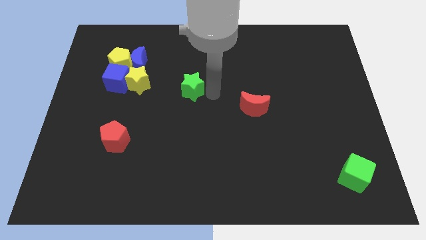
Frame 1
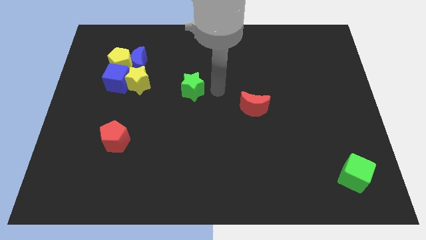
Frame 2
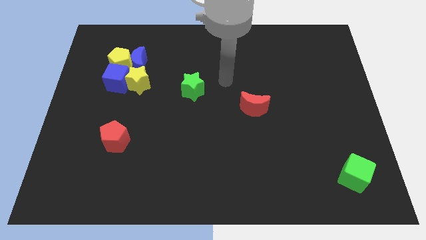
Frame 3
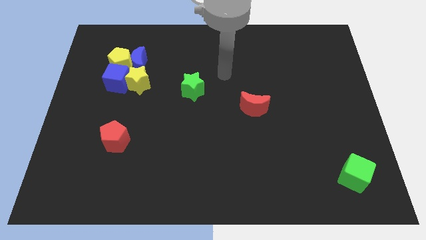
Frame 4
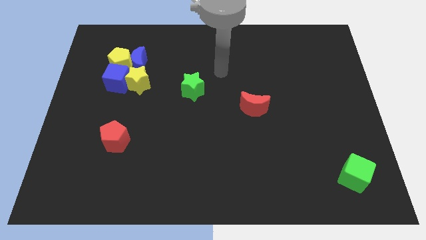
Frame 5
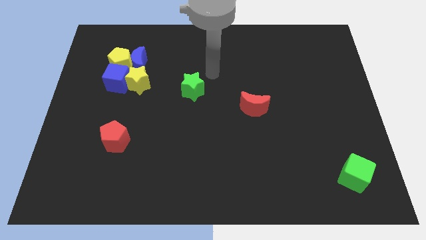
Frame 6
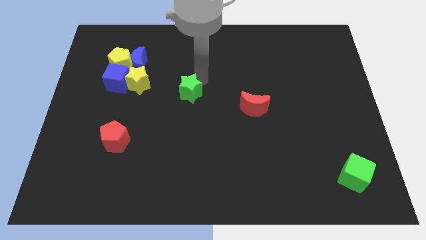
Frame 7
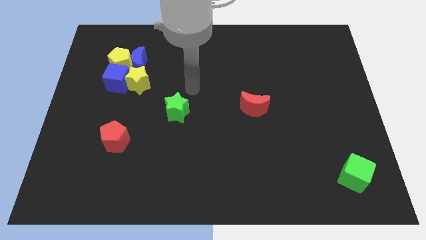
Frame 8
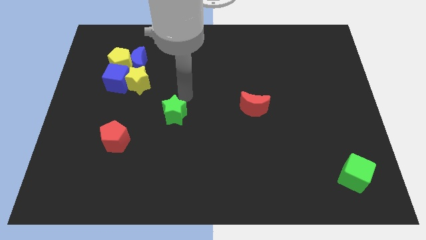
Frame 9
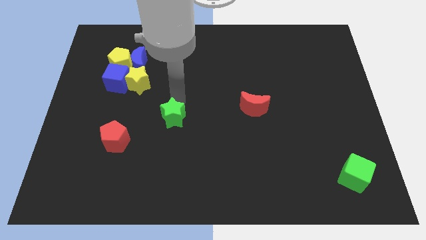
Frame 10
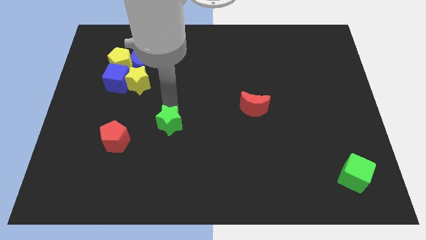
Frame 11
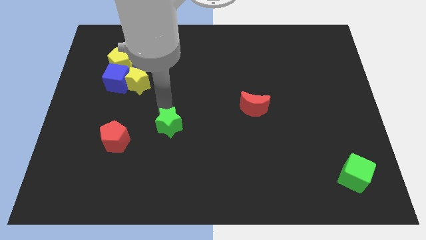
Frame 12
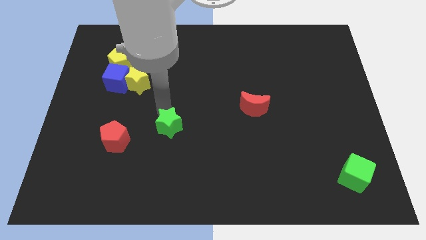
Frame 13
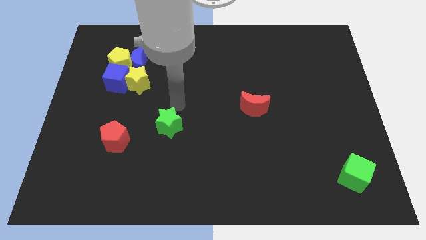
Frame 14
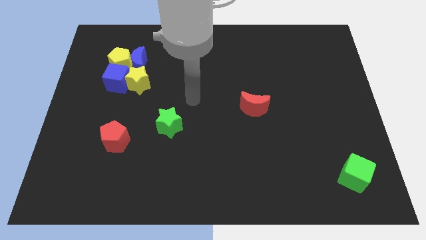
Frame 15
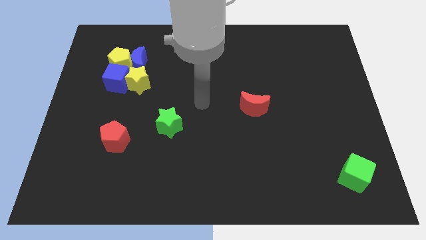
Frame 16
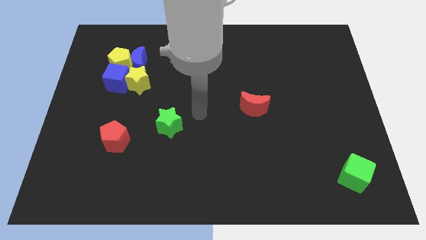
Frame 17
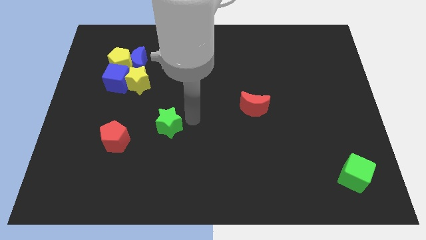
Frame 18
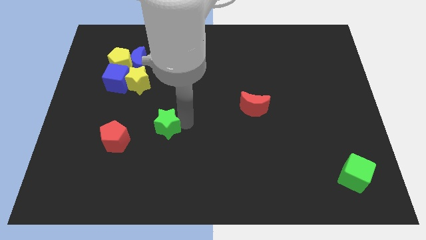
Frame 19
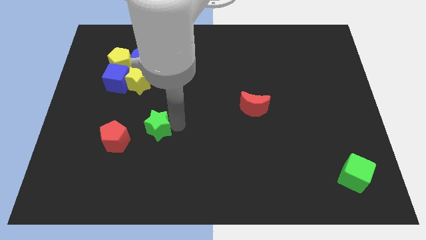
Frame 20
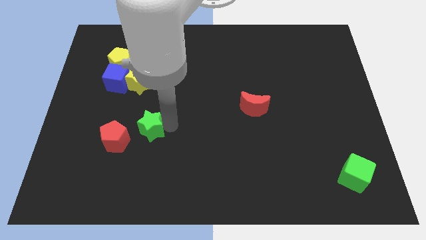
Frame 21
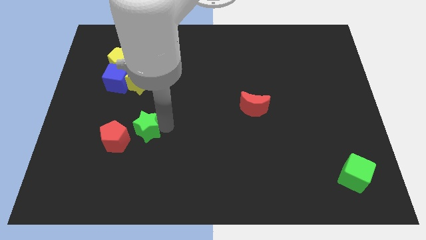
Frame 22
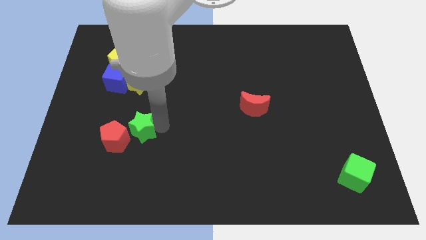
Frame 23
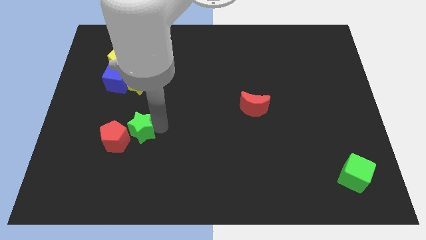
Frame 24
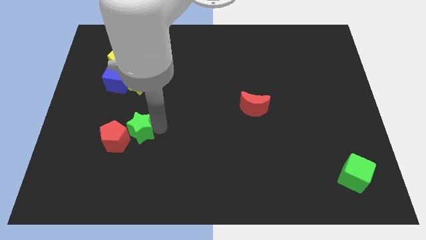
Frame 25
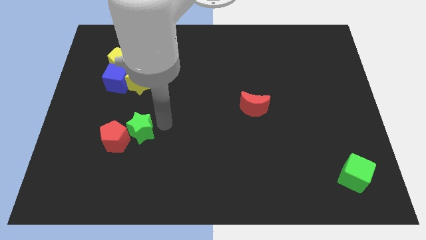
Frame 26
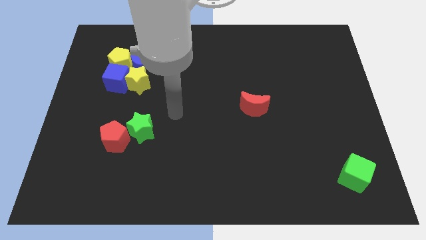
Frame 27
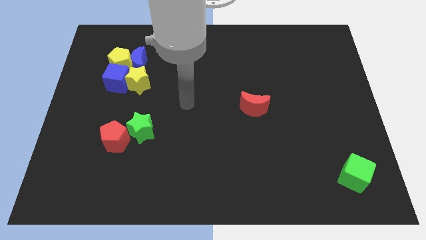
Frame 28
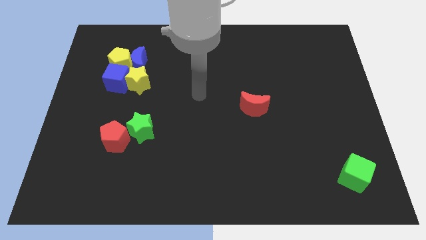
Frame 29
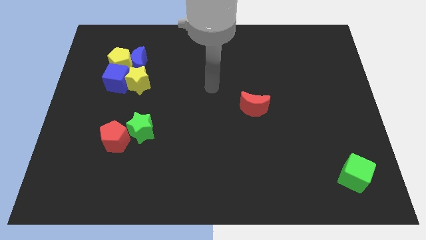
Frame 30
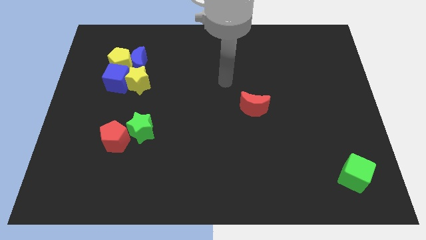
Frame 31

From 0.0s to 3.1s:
place the green star into red pentagon

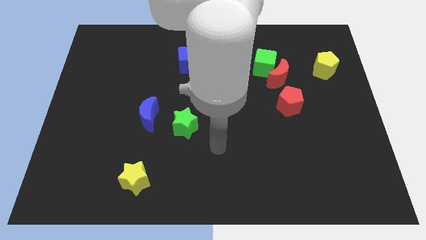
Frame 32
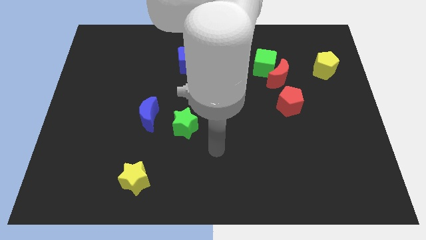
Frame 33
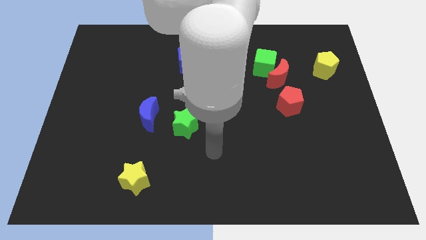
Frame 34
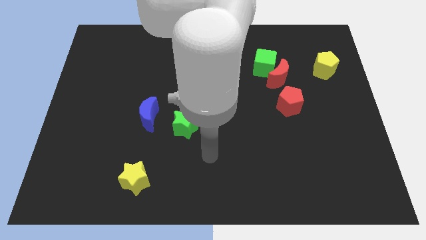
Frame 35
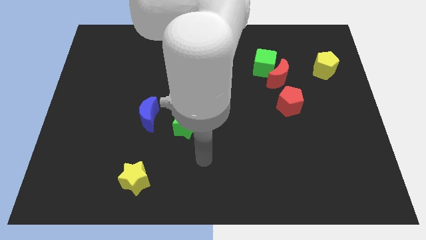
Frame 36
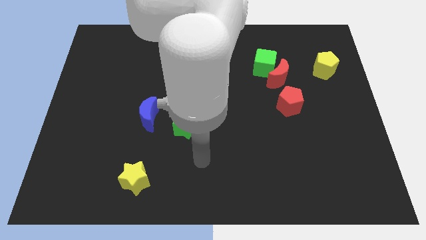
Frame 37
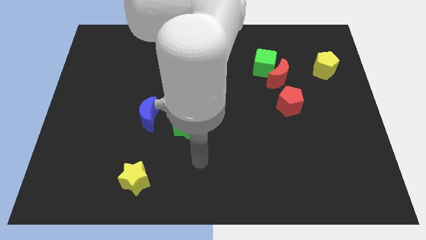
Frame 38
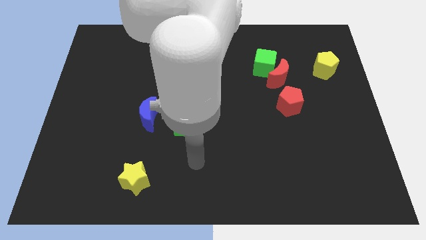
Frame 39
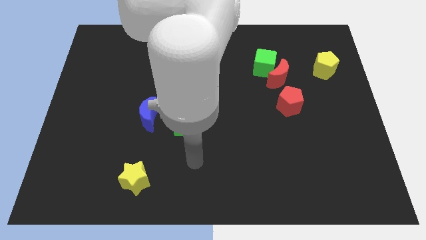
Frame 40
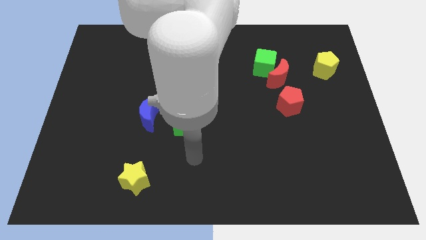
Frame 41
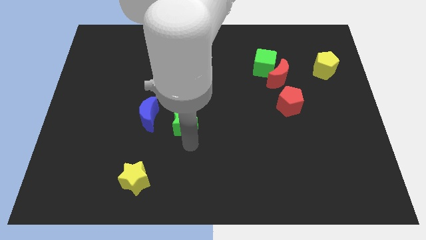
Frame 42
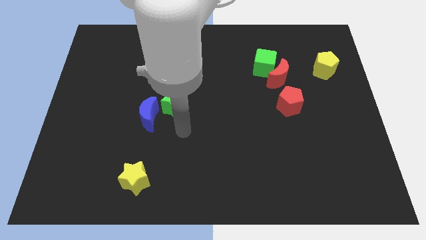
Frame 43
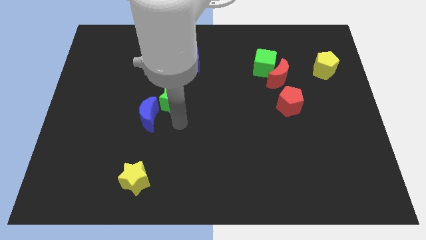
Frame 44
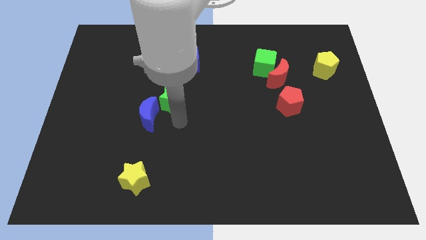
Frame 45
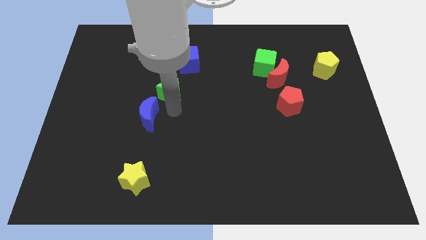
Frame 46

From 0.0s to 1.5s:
push the green star slightly to the top

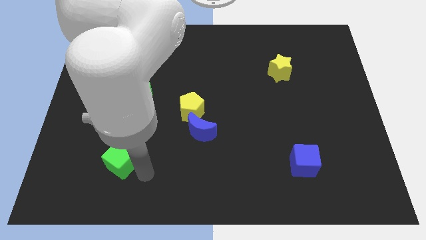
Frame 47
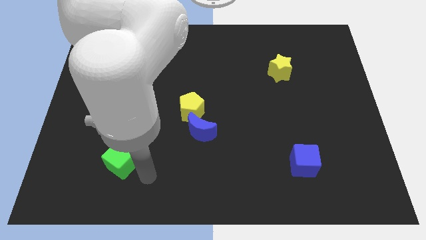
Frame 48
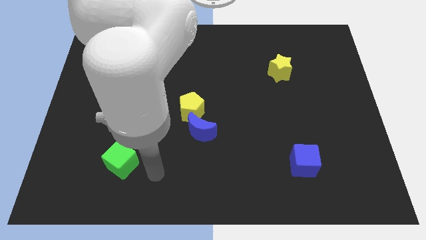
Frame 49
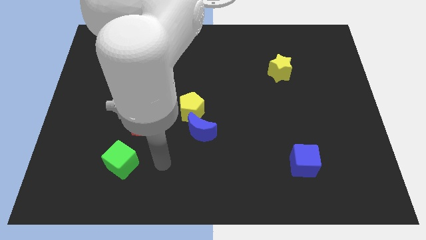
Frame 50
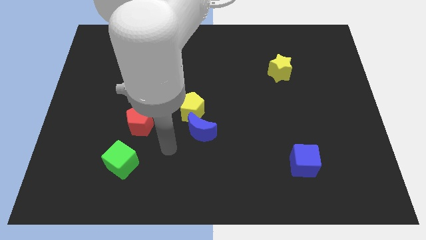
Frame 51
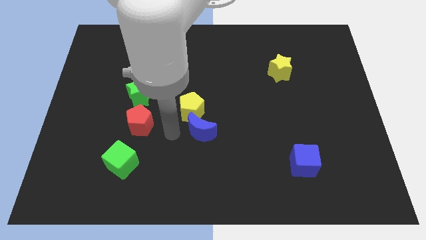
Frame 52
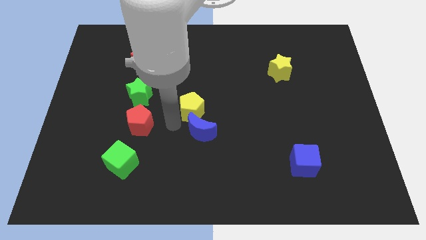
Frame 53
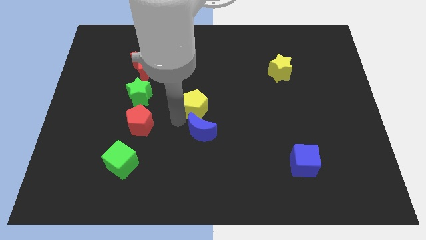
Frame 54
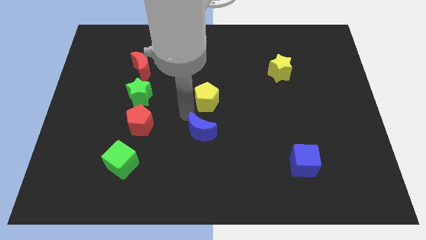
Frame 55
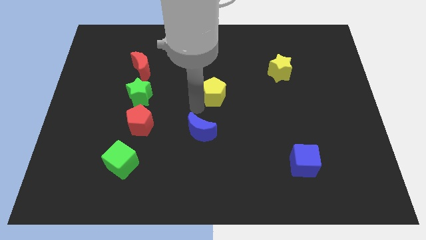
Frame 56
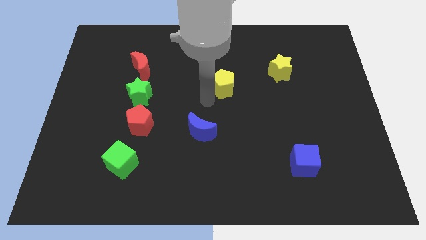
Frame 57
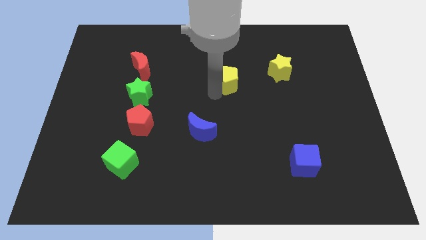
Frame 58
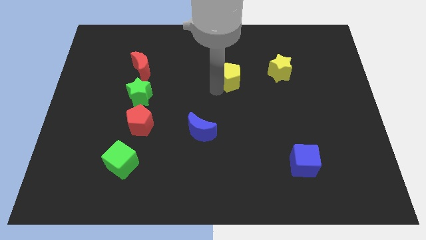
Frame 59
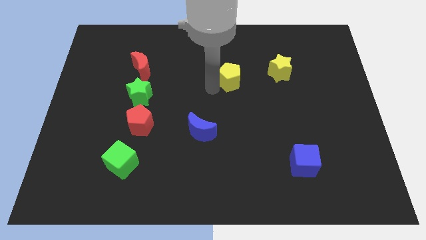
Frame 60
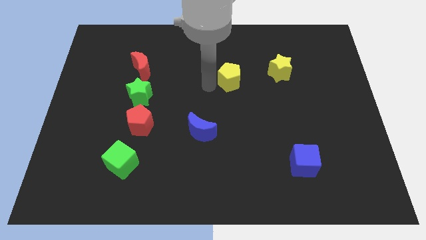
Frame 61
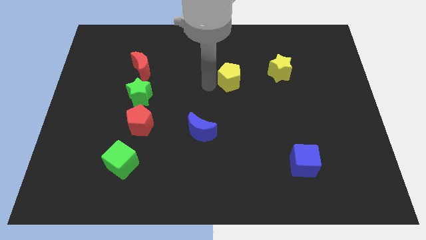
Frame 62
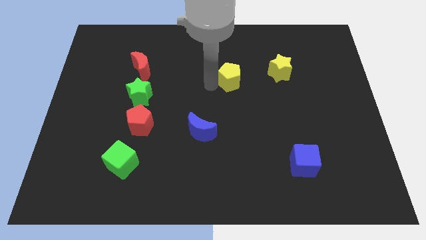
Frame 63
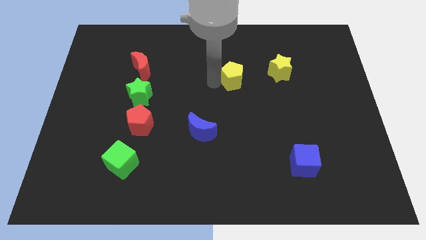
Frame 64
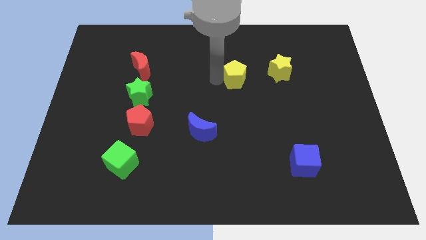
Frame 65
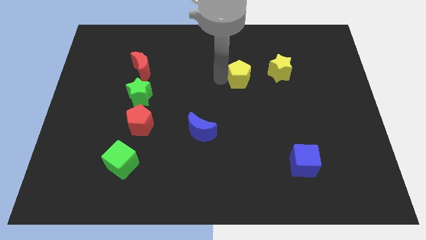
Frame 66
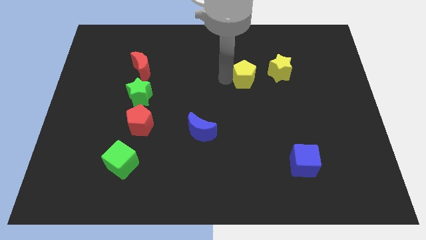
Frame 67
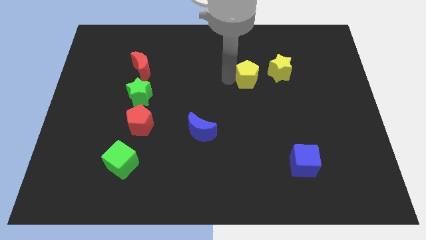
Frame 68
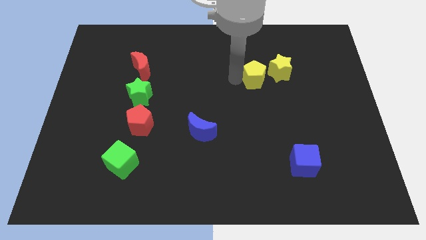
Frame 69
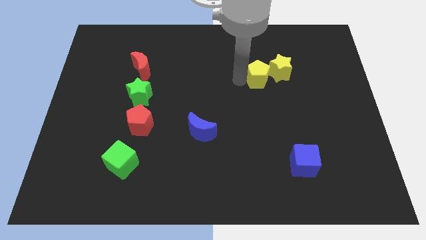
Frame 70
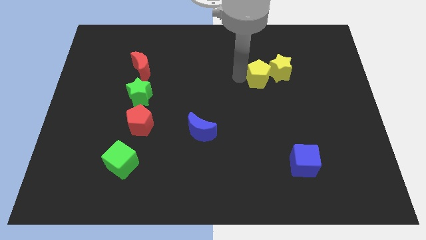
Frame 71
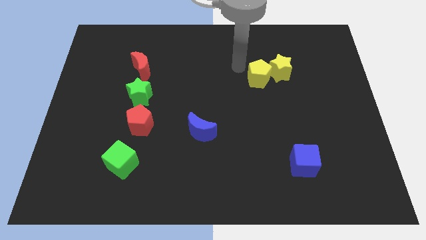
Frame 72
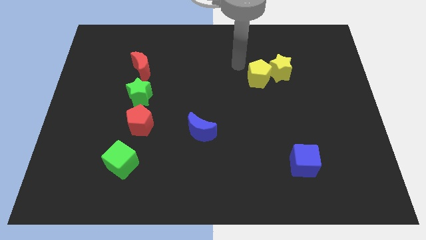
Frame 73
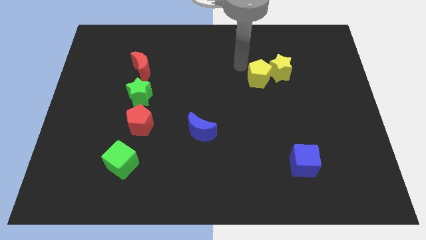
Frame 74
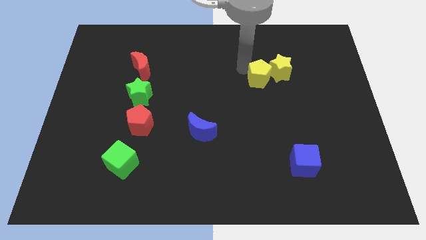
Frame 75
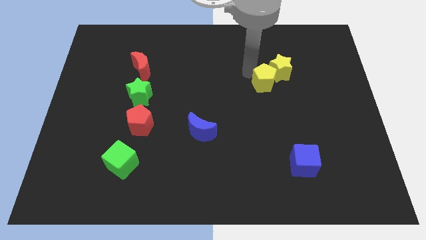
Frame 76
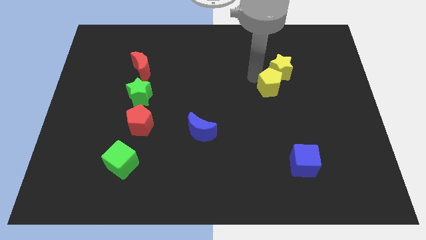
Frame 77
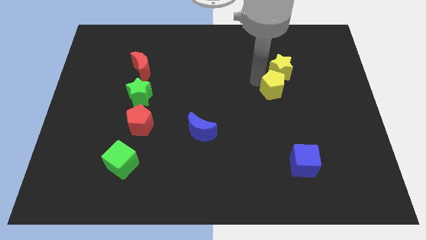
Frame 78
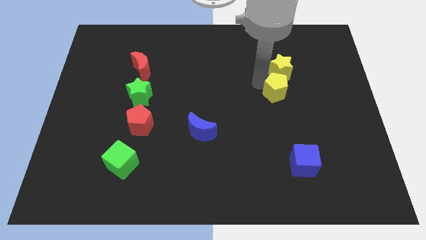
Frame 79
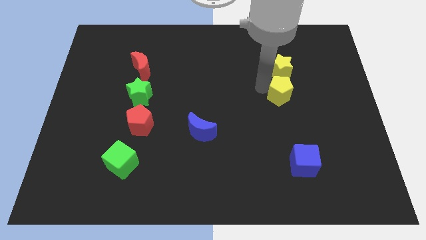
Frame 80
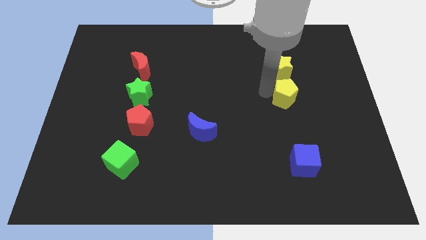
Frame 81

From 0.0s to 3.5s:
push the yellow pentagon below the yellow star

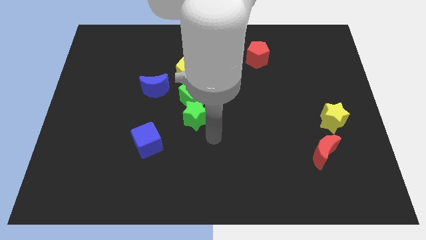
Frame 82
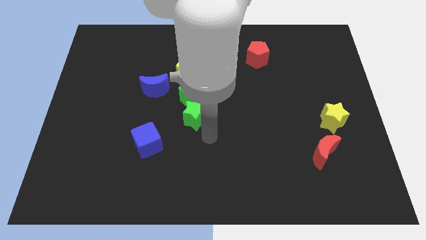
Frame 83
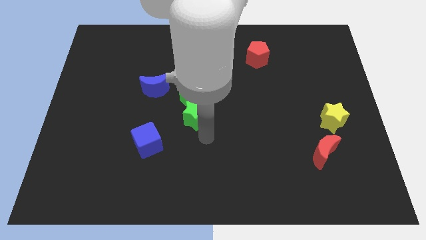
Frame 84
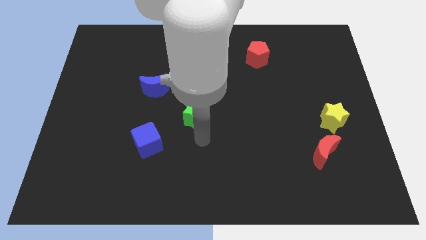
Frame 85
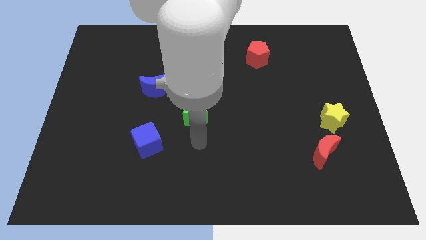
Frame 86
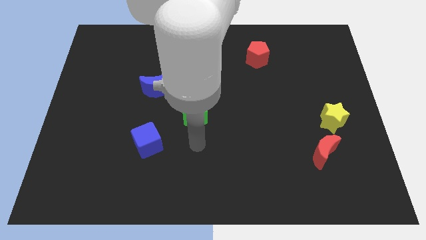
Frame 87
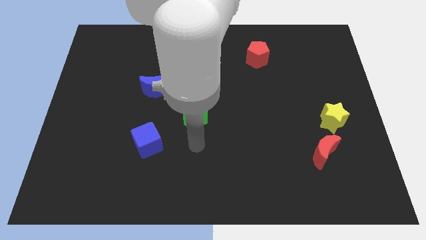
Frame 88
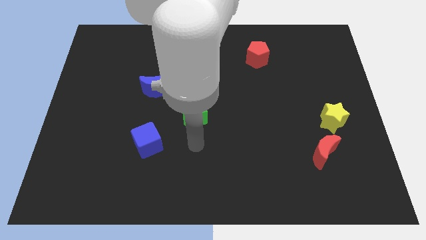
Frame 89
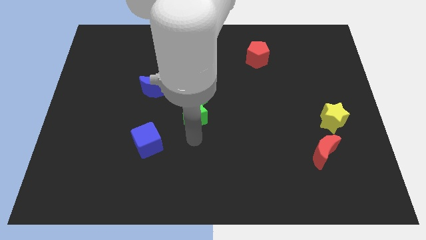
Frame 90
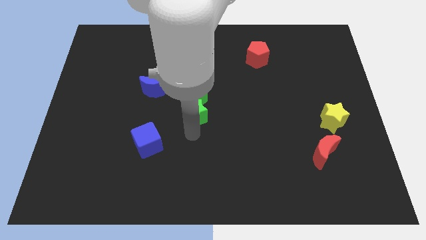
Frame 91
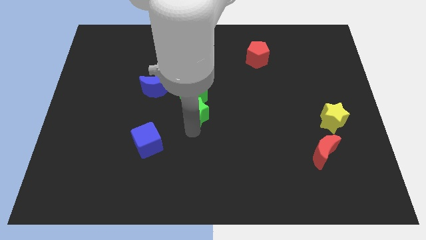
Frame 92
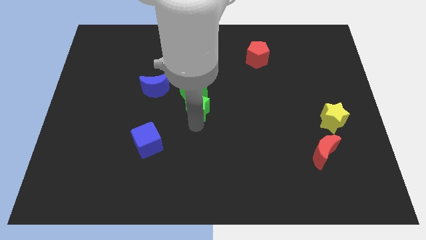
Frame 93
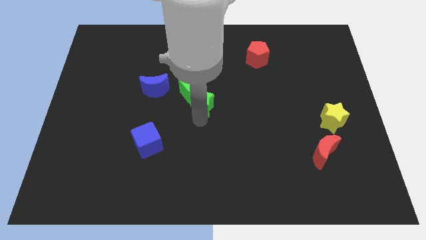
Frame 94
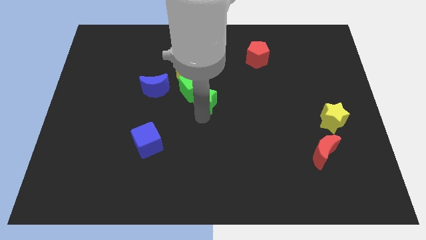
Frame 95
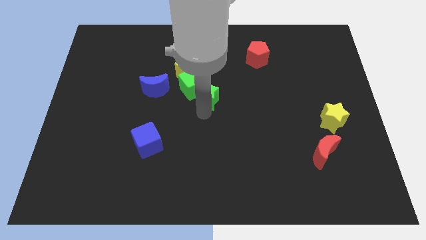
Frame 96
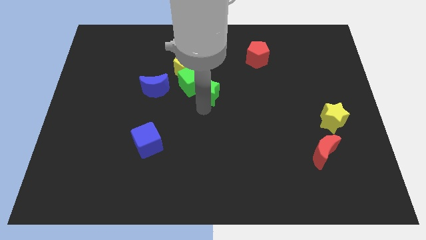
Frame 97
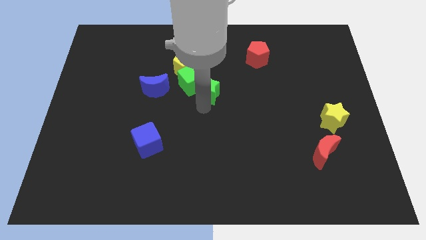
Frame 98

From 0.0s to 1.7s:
push green star into the green cube
